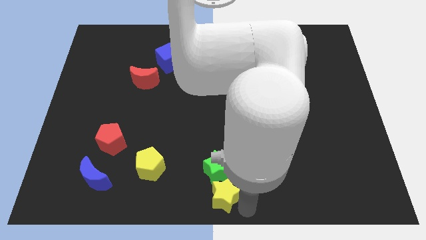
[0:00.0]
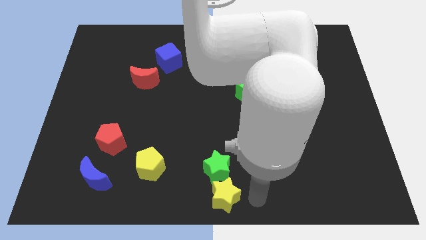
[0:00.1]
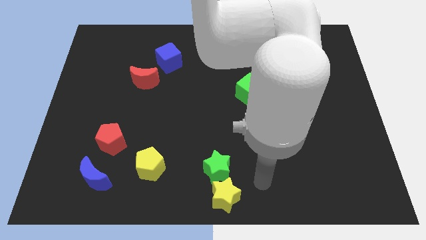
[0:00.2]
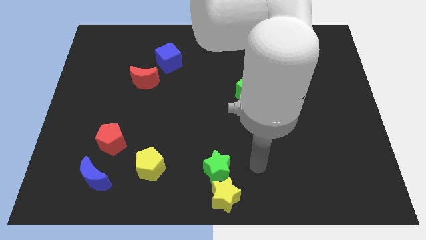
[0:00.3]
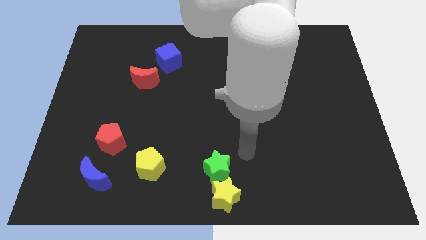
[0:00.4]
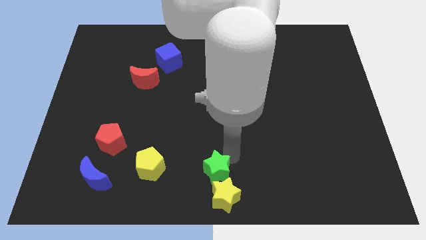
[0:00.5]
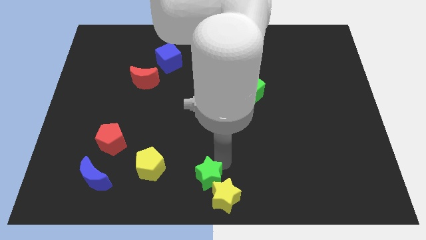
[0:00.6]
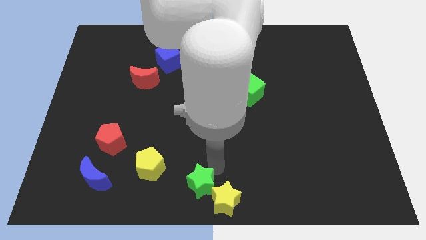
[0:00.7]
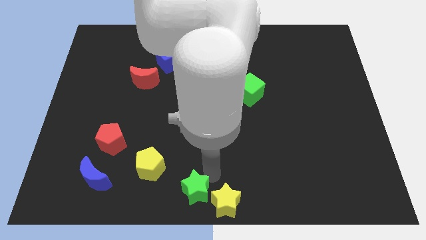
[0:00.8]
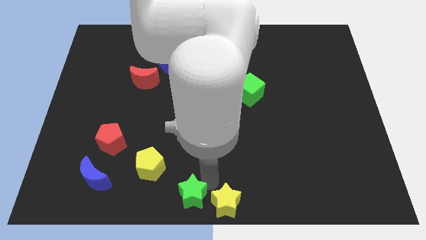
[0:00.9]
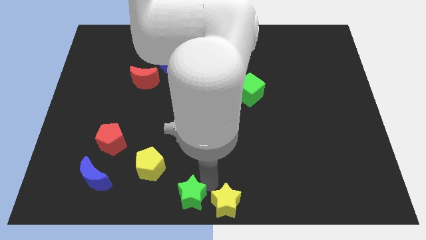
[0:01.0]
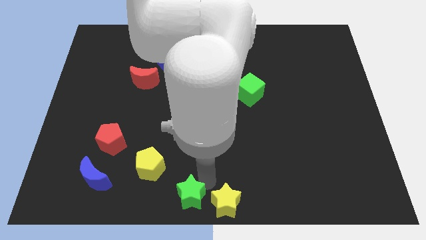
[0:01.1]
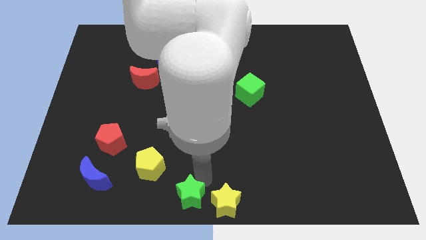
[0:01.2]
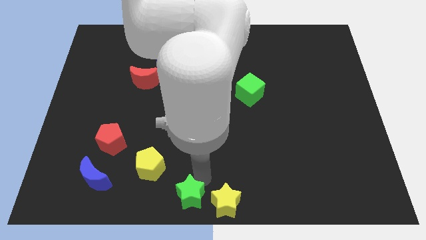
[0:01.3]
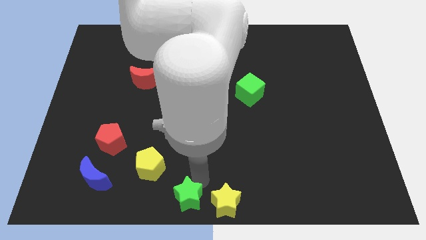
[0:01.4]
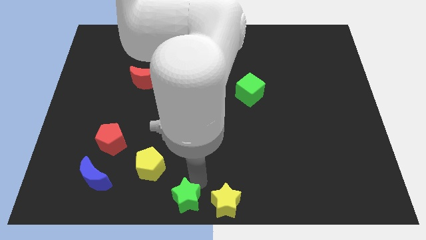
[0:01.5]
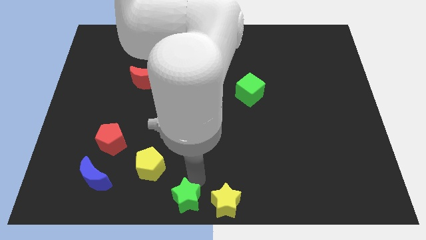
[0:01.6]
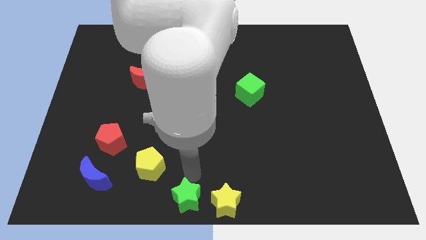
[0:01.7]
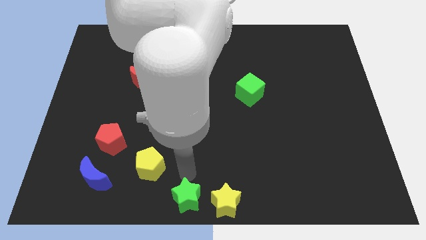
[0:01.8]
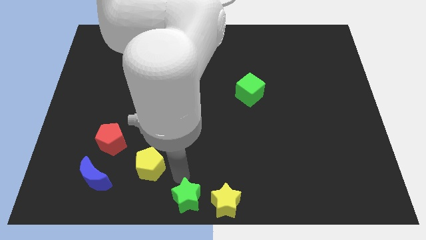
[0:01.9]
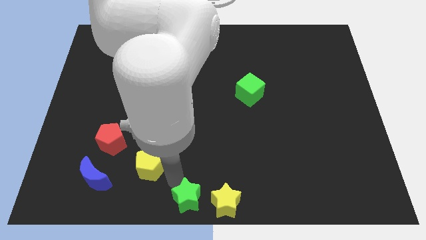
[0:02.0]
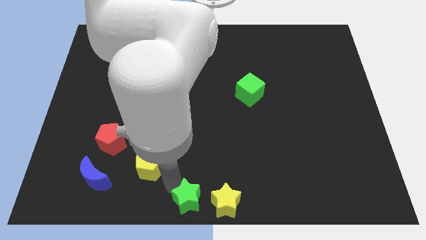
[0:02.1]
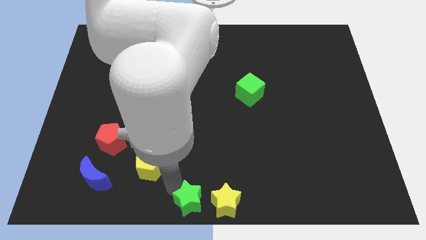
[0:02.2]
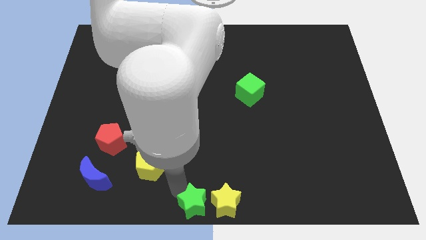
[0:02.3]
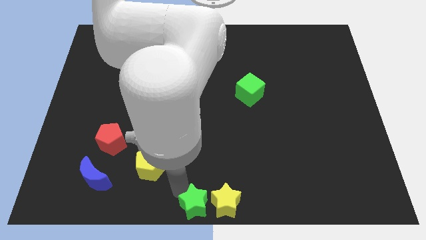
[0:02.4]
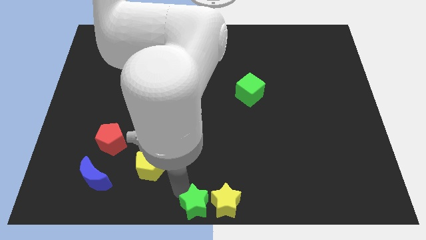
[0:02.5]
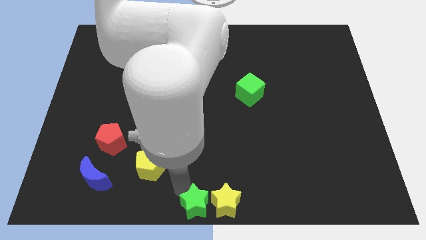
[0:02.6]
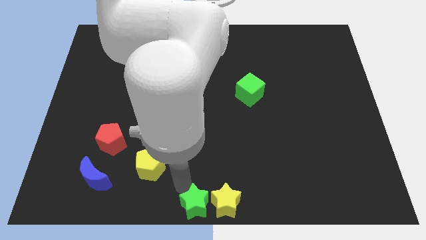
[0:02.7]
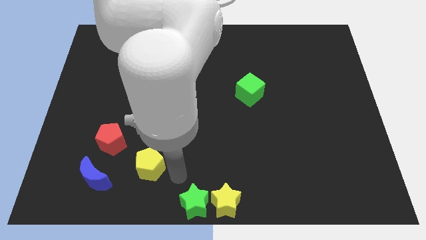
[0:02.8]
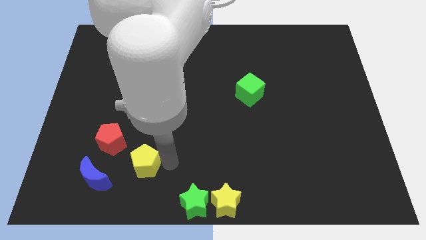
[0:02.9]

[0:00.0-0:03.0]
place the green star near the yellow star

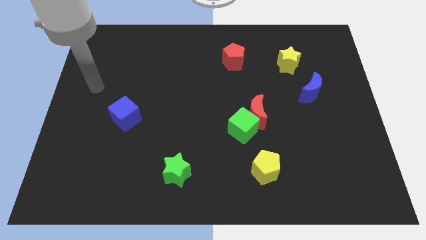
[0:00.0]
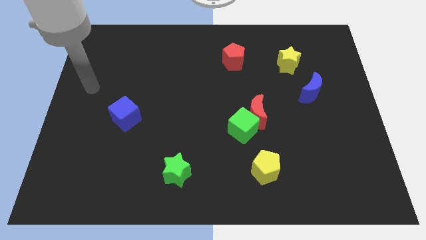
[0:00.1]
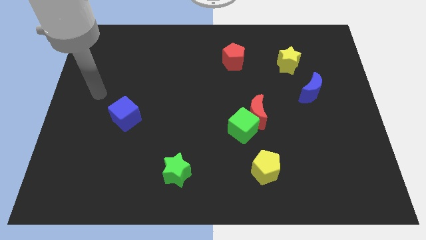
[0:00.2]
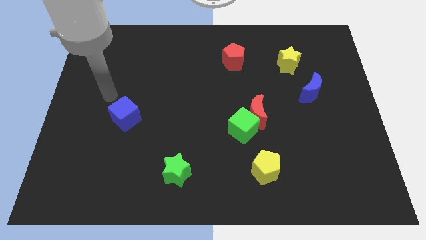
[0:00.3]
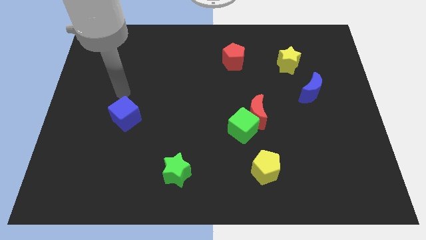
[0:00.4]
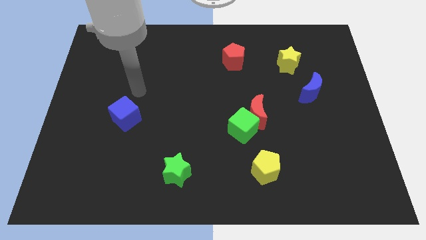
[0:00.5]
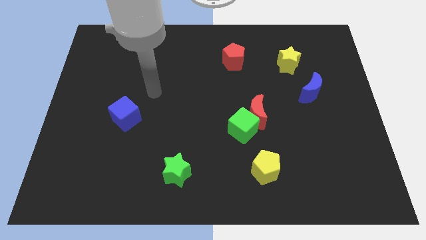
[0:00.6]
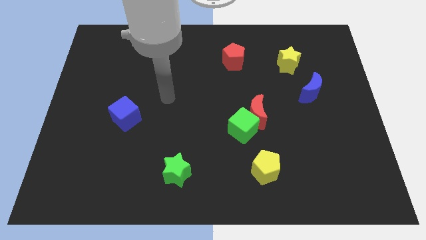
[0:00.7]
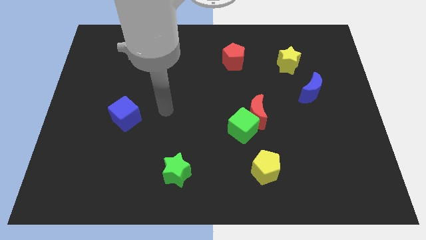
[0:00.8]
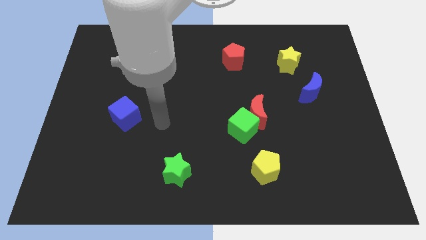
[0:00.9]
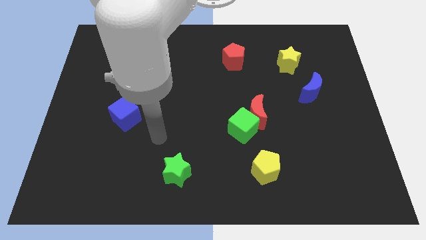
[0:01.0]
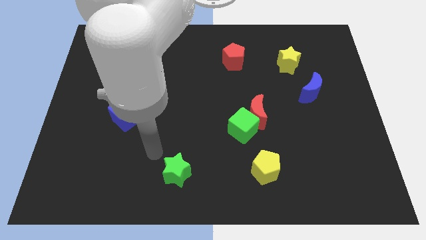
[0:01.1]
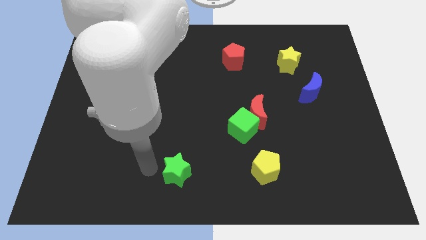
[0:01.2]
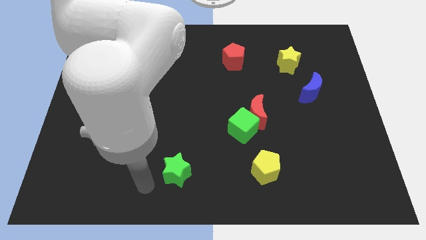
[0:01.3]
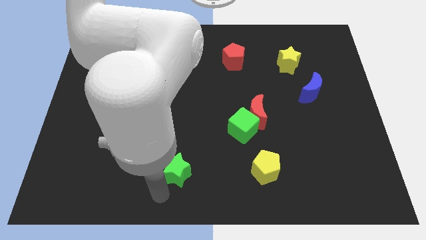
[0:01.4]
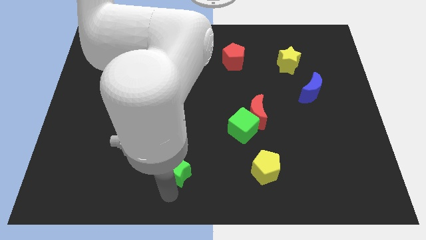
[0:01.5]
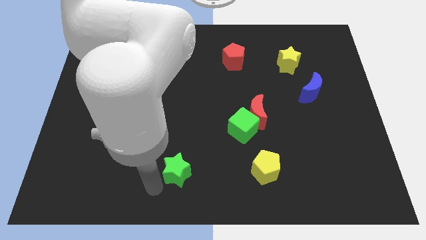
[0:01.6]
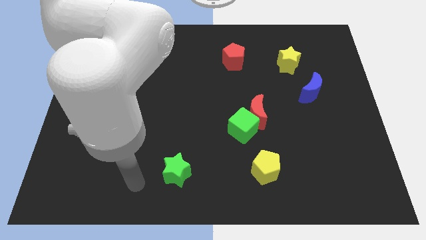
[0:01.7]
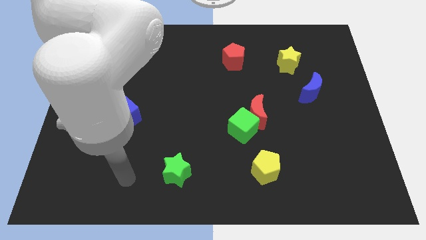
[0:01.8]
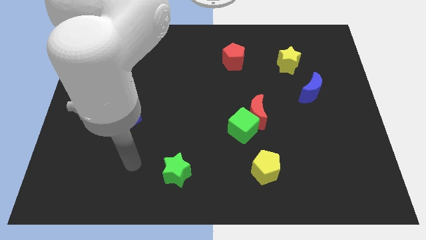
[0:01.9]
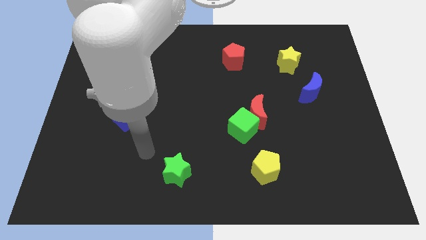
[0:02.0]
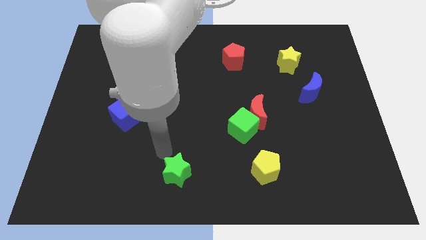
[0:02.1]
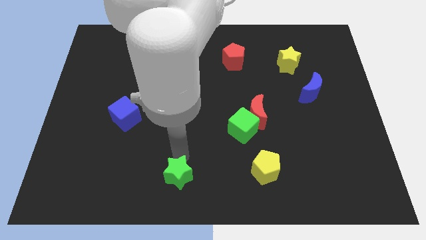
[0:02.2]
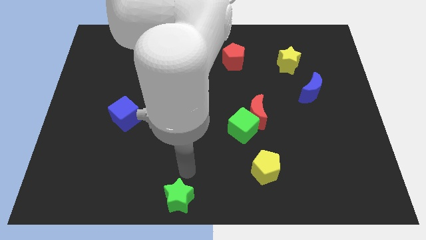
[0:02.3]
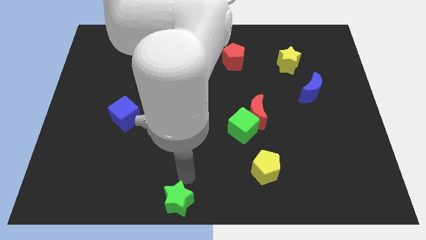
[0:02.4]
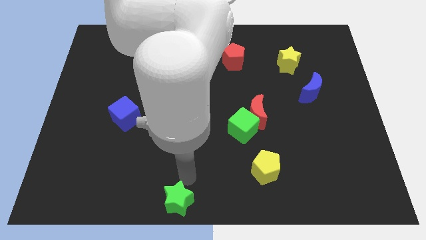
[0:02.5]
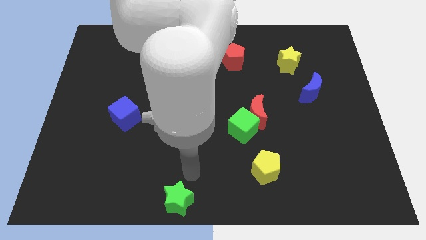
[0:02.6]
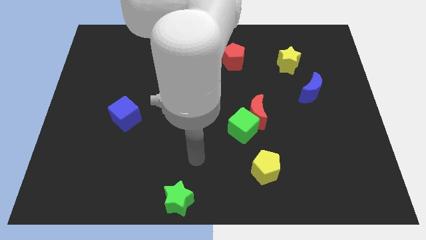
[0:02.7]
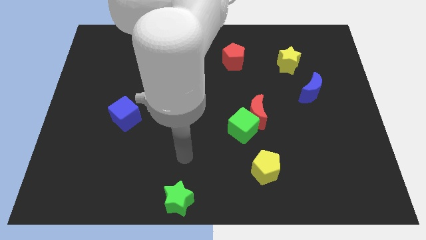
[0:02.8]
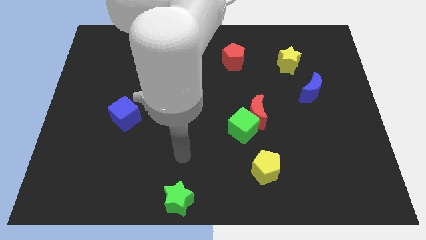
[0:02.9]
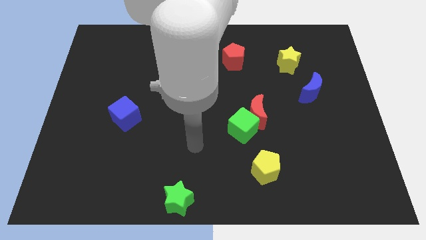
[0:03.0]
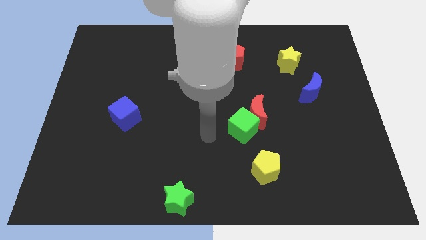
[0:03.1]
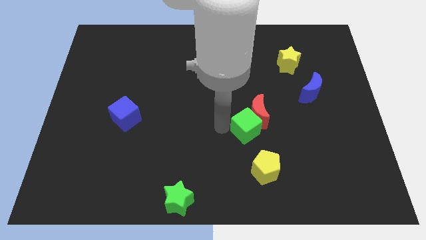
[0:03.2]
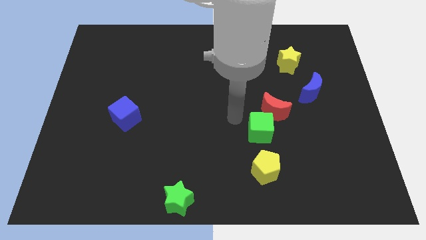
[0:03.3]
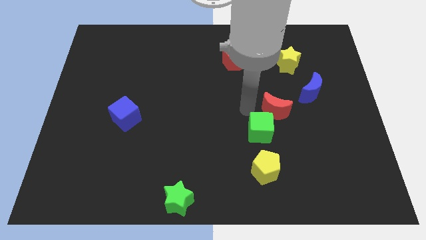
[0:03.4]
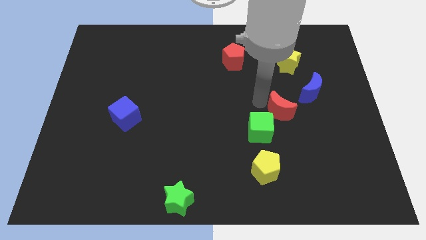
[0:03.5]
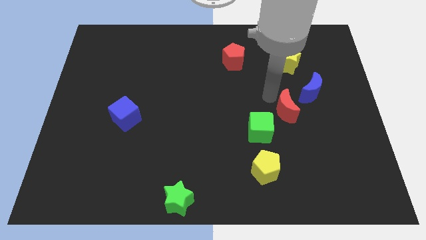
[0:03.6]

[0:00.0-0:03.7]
push the green star to the bottom

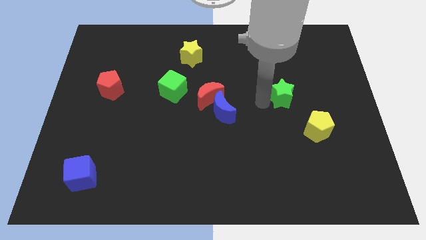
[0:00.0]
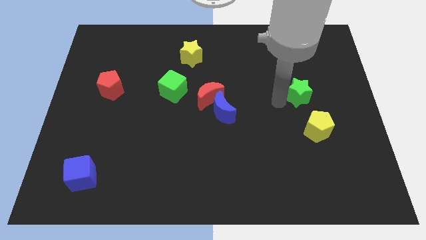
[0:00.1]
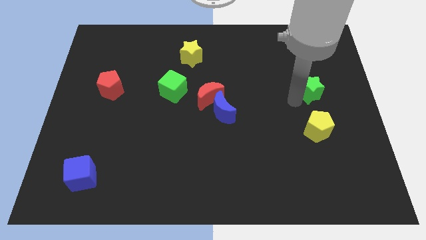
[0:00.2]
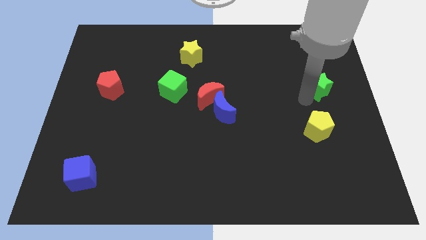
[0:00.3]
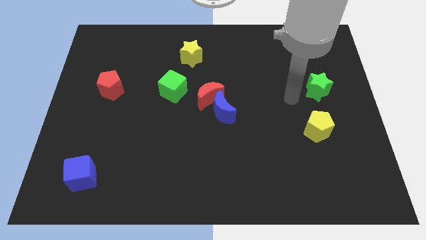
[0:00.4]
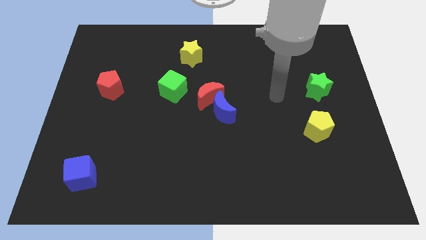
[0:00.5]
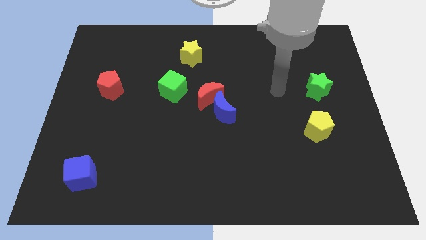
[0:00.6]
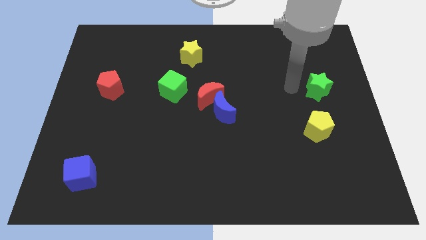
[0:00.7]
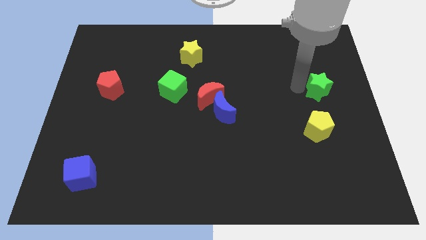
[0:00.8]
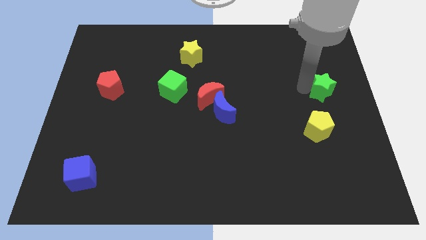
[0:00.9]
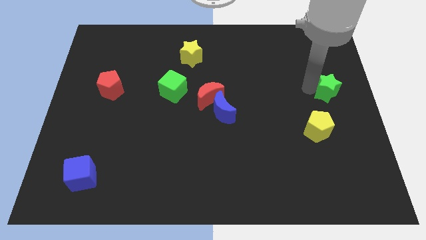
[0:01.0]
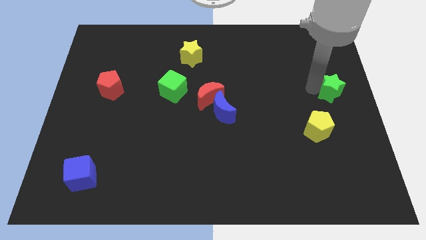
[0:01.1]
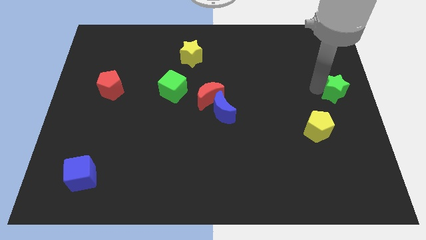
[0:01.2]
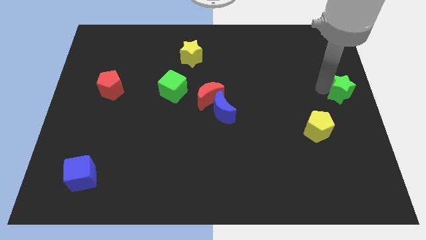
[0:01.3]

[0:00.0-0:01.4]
move the green star to the top right side of the yellow pentagon

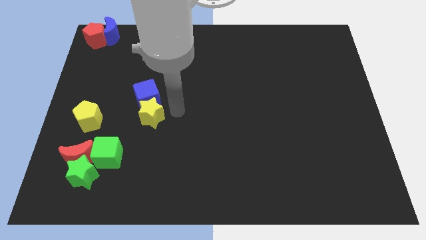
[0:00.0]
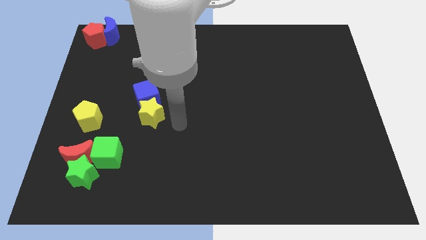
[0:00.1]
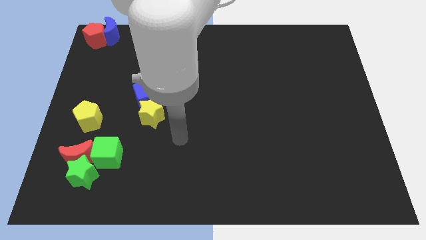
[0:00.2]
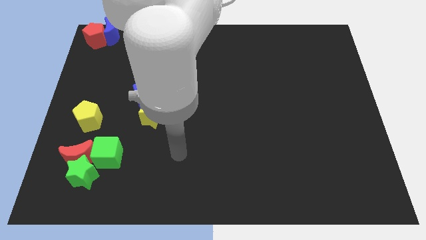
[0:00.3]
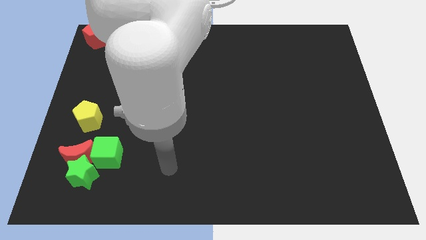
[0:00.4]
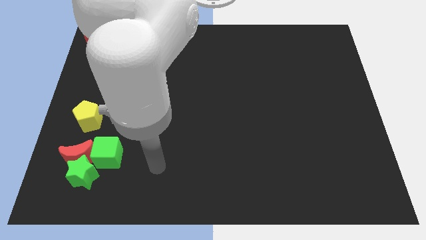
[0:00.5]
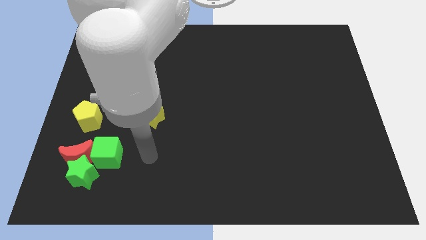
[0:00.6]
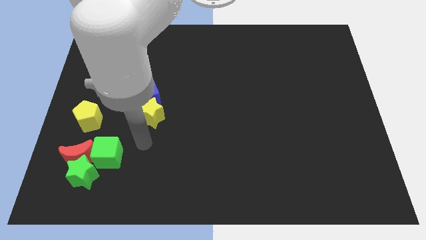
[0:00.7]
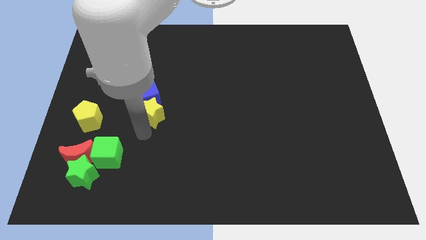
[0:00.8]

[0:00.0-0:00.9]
move your arm to the bottom of the yellow star
